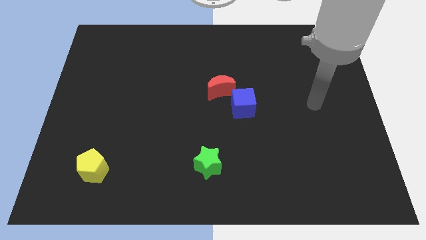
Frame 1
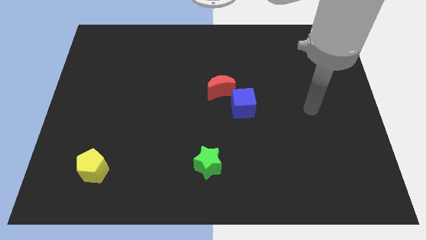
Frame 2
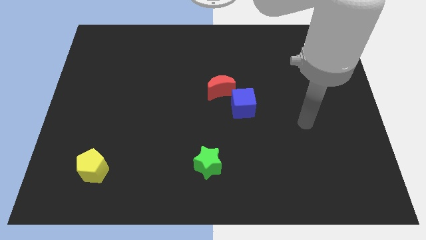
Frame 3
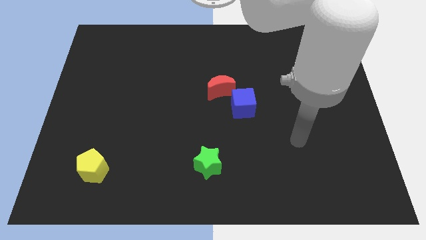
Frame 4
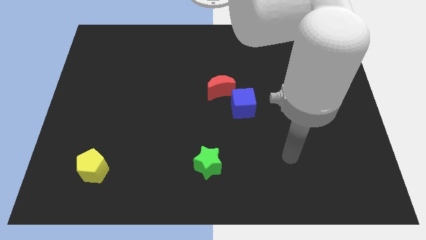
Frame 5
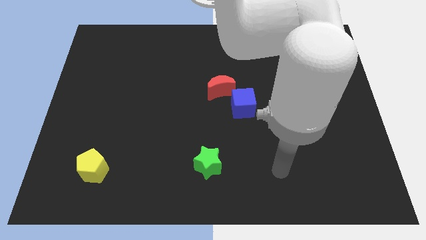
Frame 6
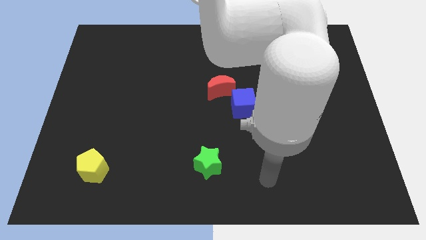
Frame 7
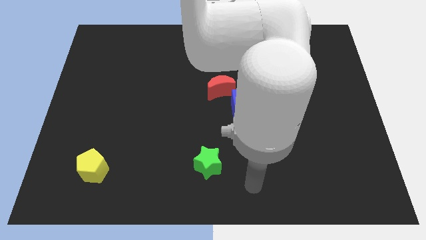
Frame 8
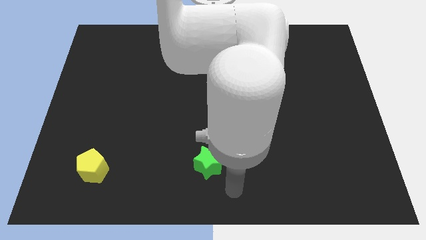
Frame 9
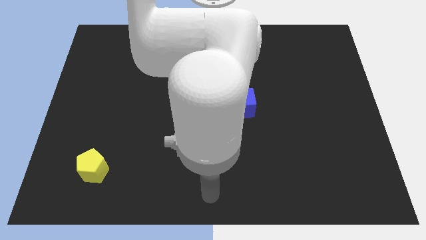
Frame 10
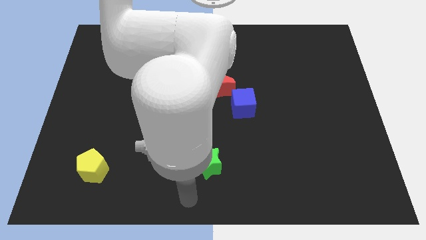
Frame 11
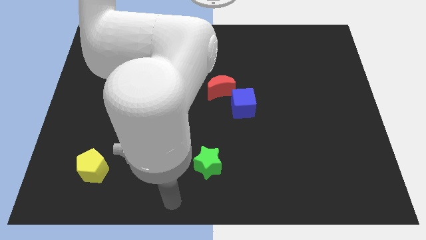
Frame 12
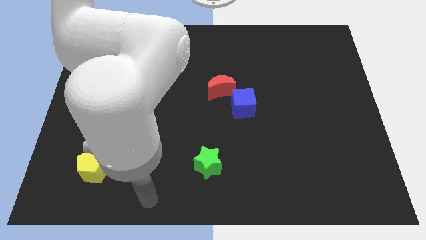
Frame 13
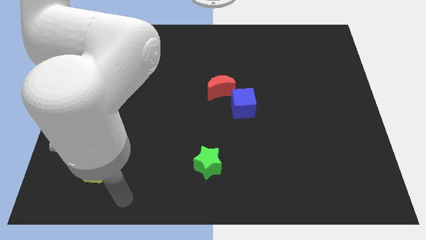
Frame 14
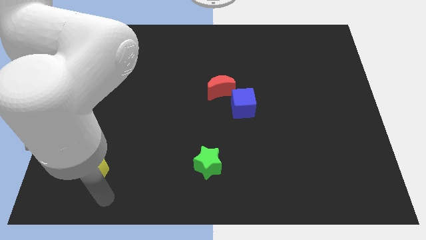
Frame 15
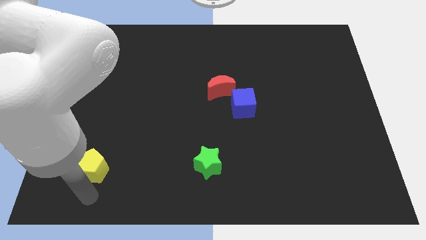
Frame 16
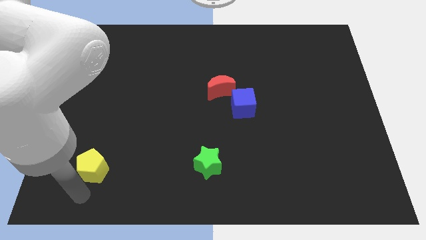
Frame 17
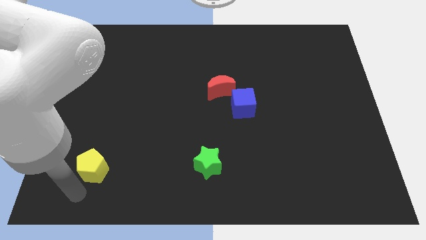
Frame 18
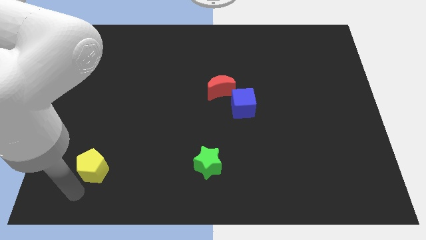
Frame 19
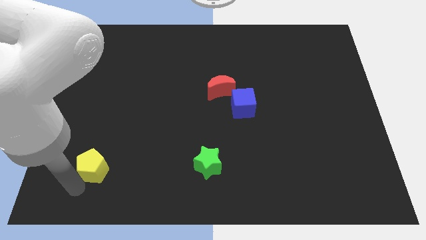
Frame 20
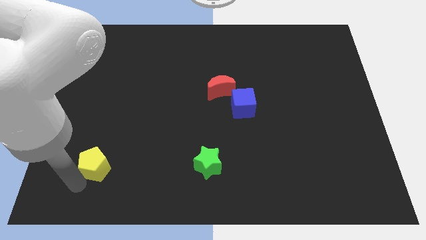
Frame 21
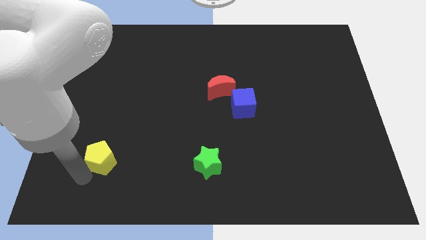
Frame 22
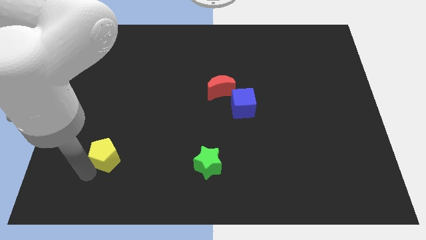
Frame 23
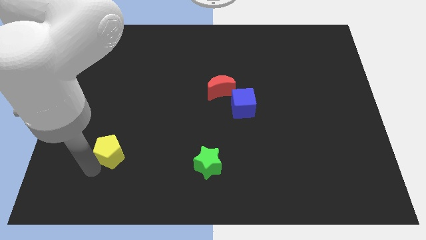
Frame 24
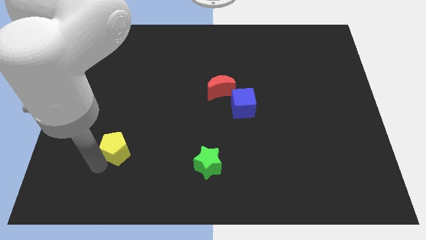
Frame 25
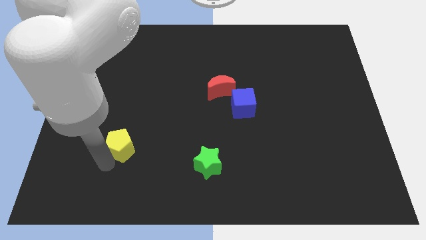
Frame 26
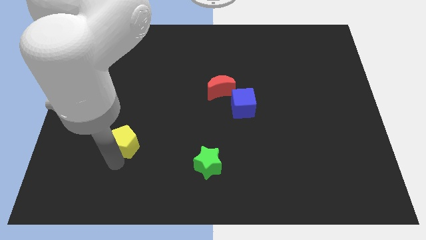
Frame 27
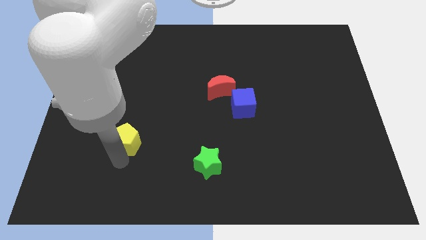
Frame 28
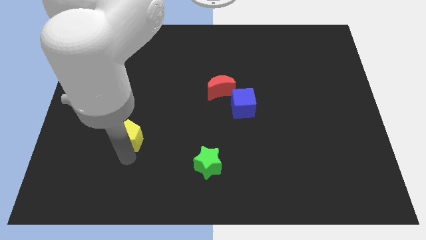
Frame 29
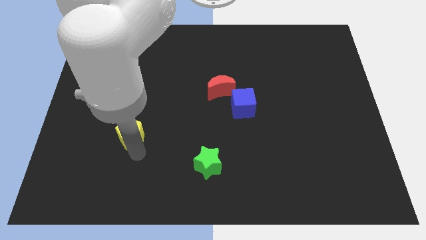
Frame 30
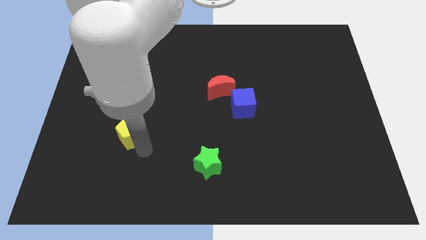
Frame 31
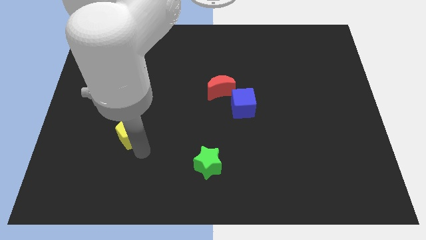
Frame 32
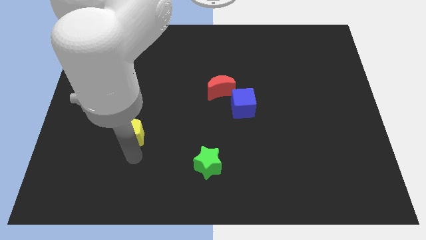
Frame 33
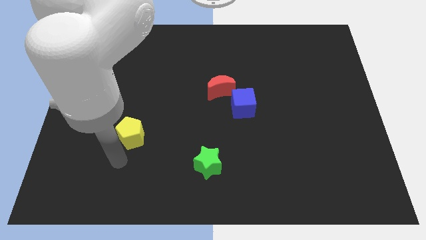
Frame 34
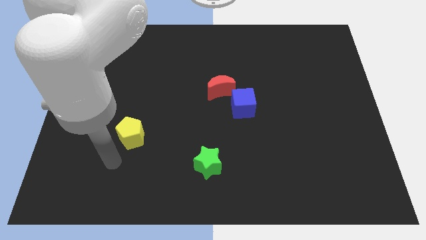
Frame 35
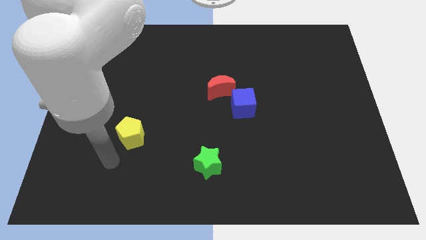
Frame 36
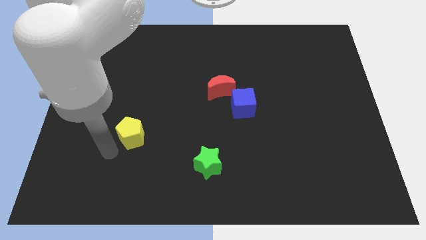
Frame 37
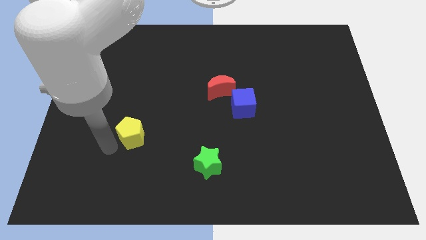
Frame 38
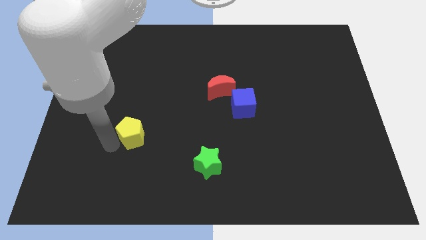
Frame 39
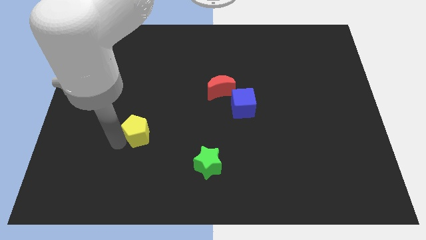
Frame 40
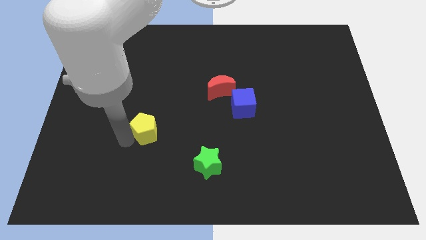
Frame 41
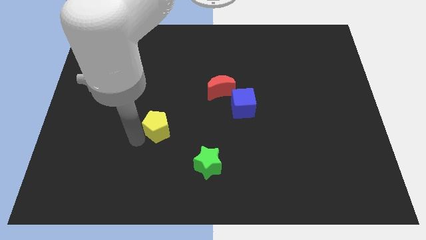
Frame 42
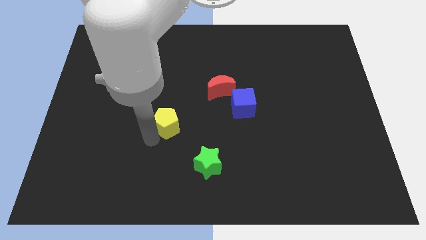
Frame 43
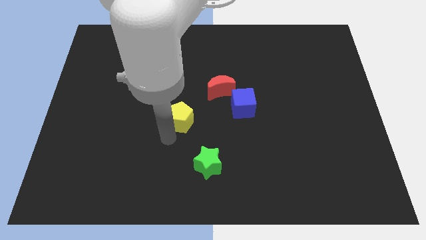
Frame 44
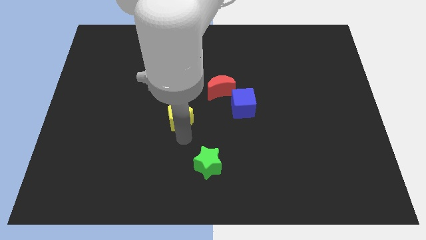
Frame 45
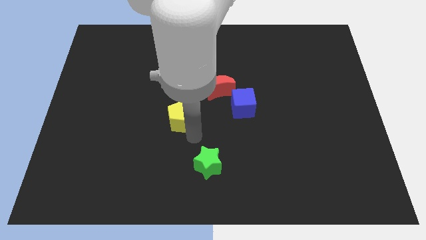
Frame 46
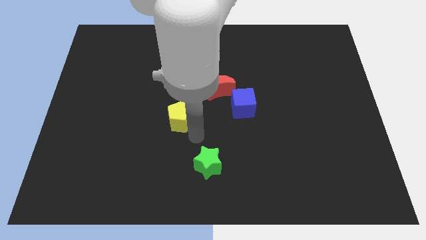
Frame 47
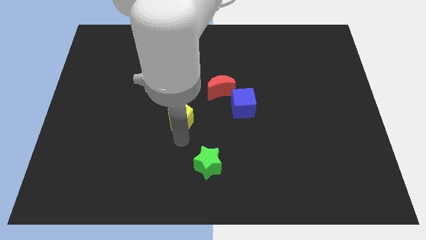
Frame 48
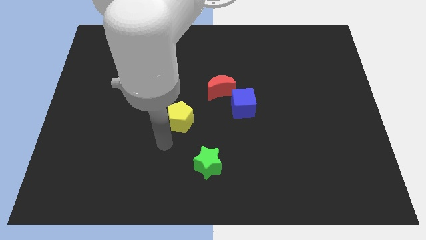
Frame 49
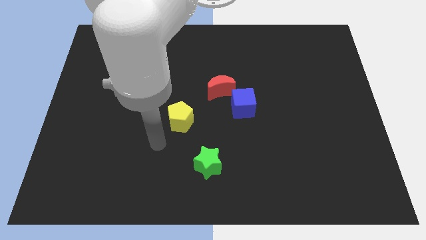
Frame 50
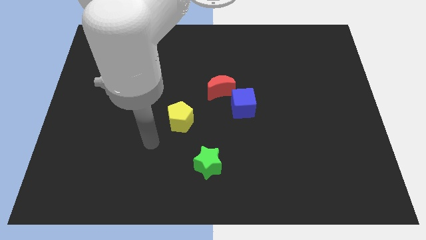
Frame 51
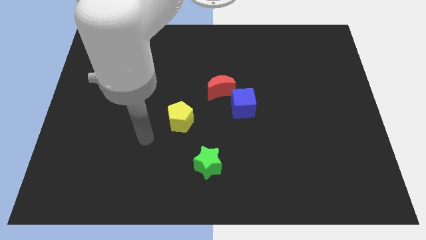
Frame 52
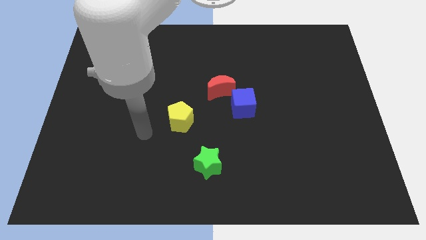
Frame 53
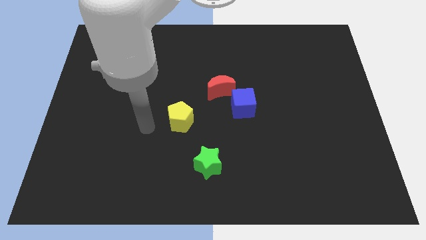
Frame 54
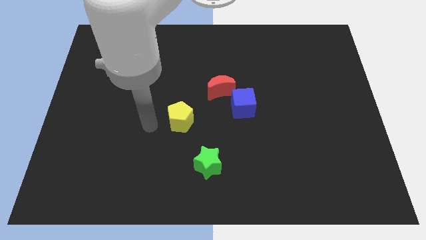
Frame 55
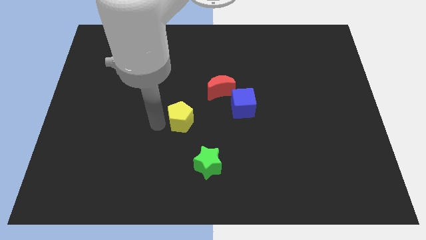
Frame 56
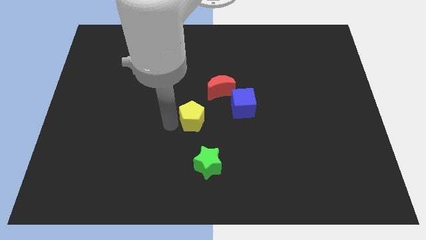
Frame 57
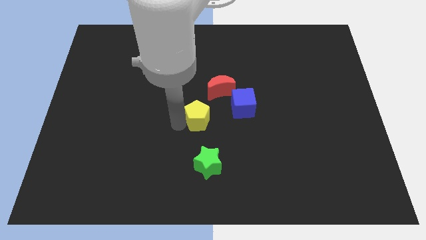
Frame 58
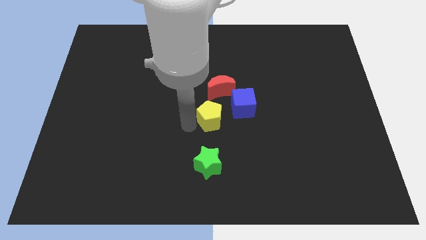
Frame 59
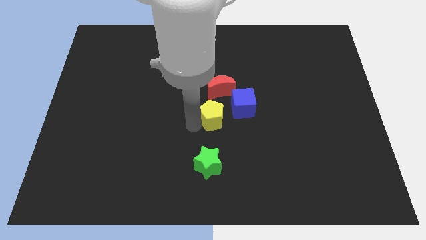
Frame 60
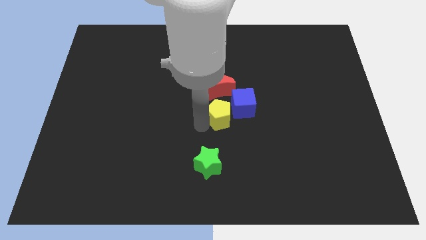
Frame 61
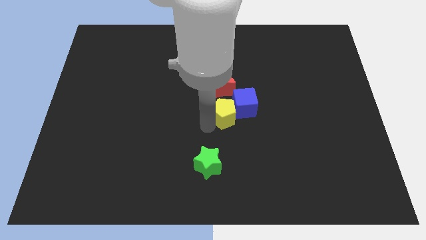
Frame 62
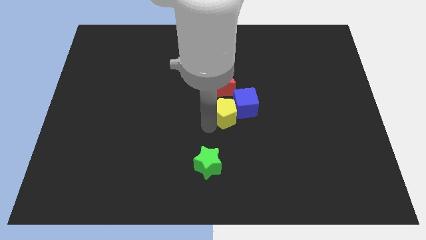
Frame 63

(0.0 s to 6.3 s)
move the yellow pentagon to the blue cube

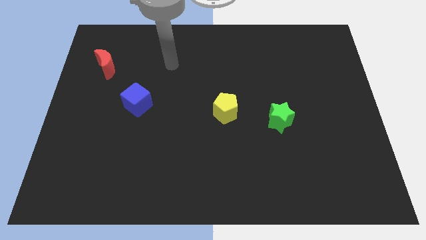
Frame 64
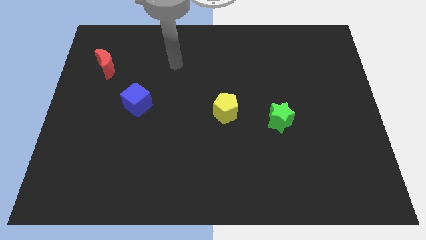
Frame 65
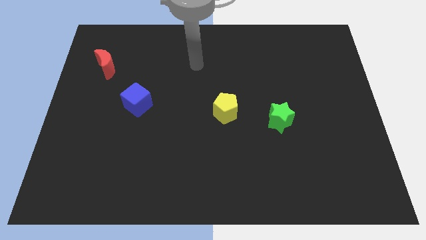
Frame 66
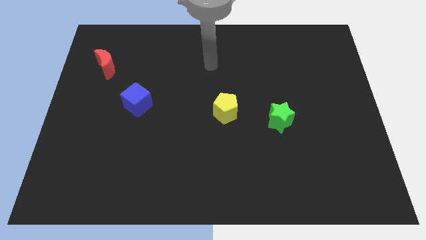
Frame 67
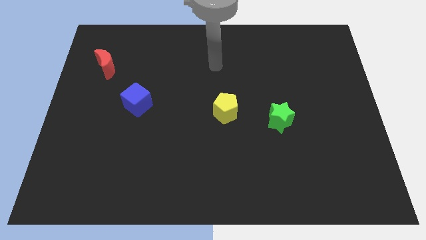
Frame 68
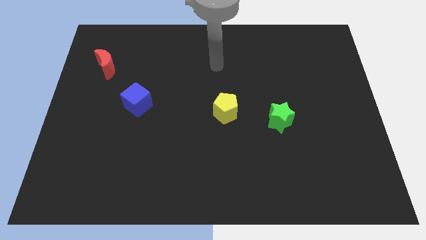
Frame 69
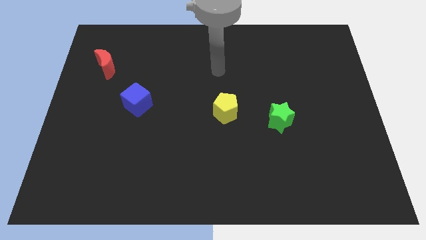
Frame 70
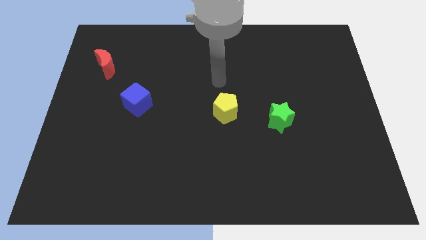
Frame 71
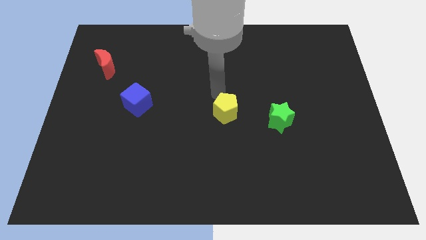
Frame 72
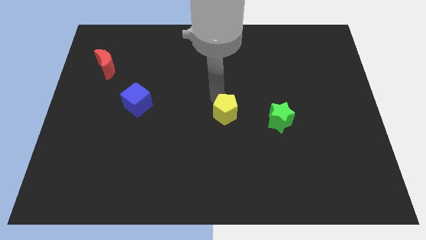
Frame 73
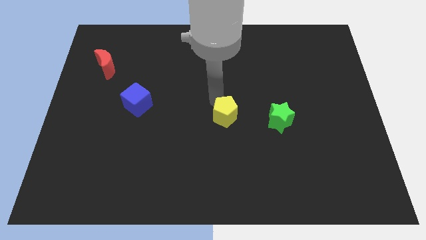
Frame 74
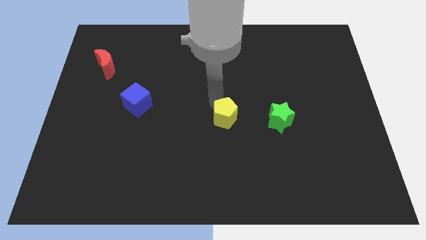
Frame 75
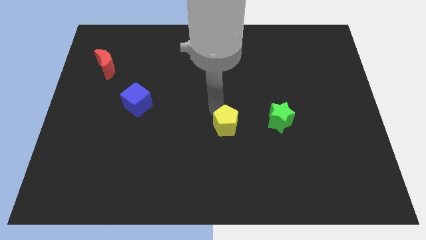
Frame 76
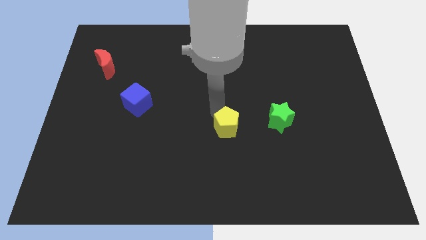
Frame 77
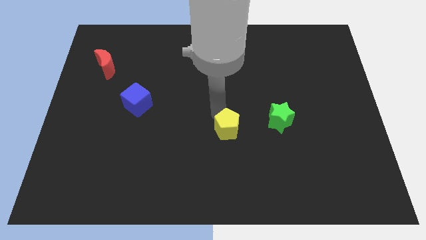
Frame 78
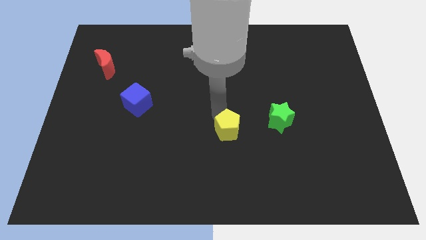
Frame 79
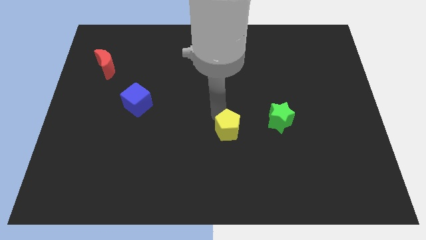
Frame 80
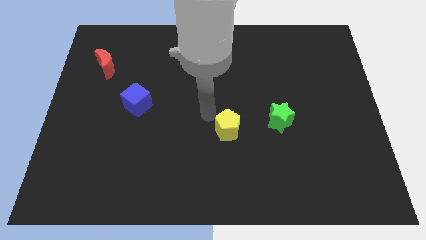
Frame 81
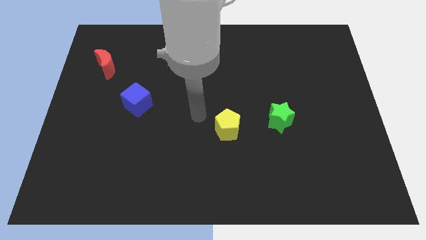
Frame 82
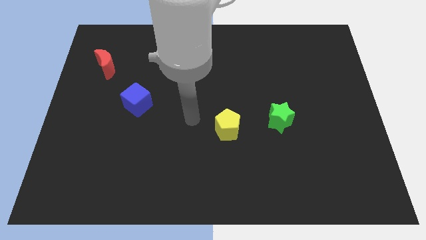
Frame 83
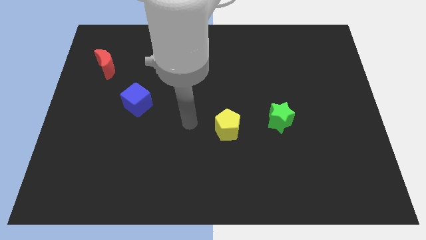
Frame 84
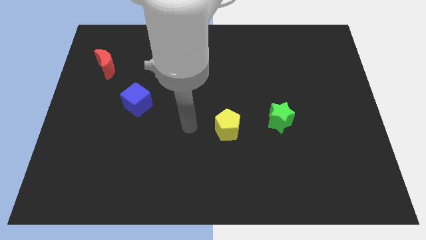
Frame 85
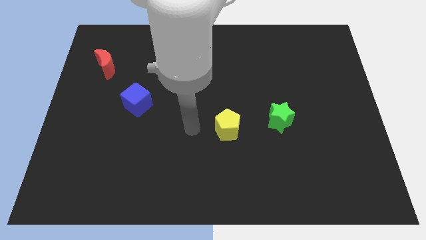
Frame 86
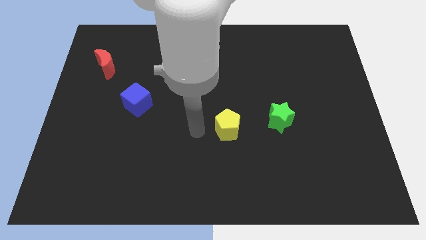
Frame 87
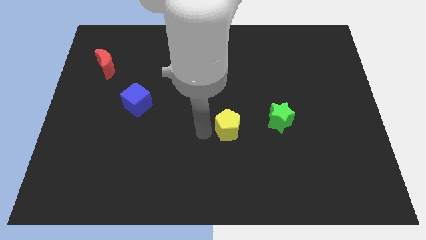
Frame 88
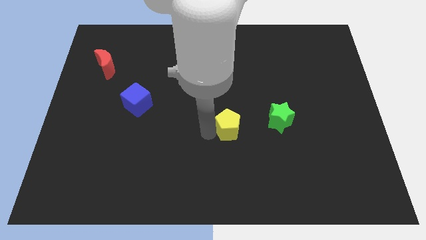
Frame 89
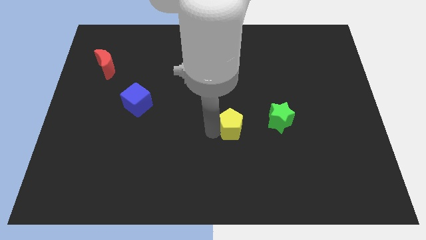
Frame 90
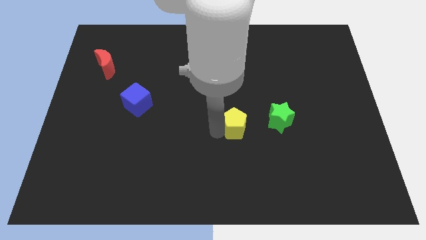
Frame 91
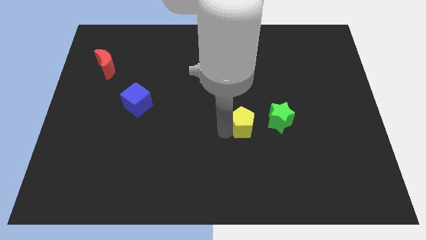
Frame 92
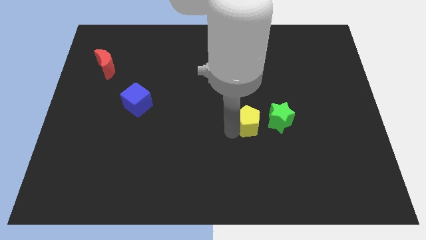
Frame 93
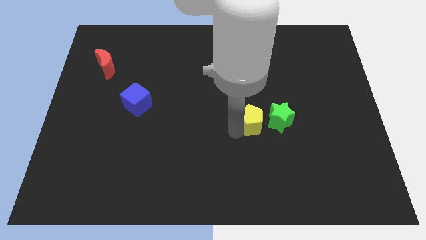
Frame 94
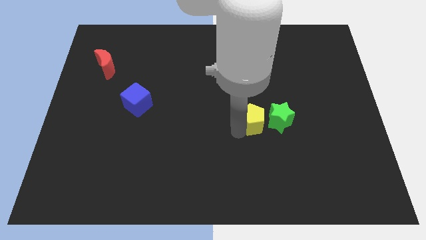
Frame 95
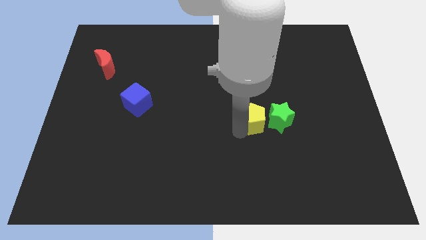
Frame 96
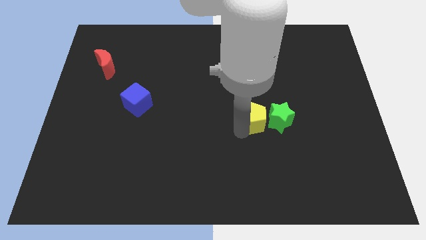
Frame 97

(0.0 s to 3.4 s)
push the yellow block close to the star
